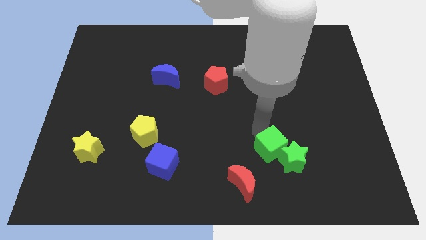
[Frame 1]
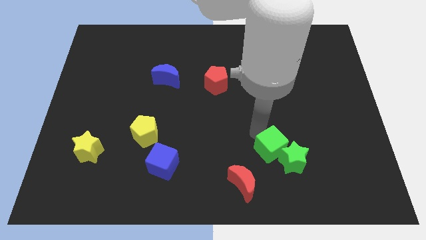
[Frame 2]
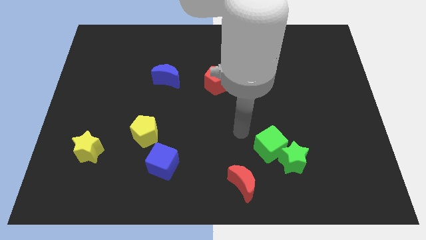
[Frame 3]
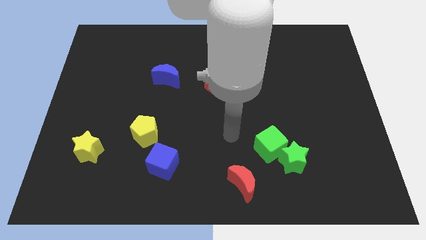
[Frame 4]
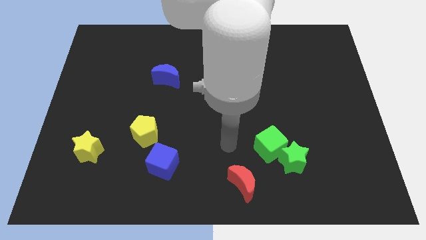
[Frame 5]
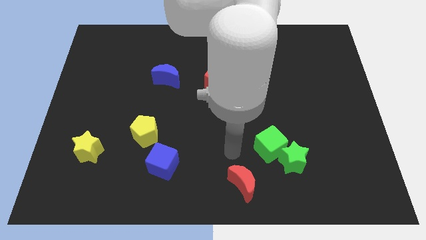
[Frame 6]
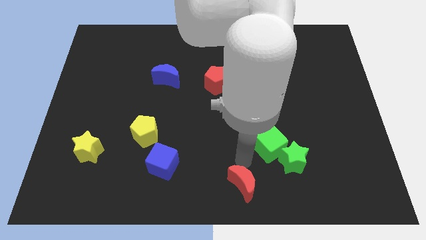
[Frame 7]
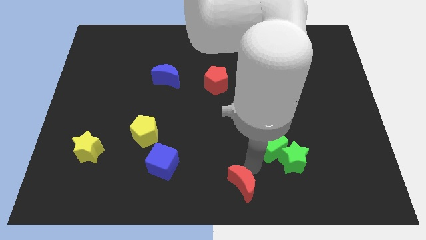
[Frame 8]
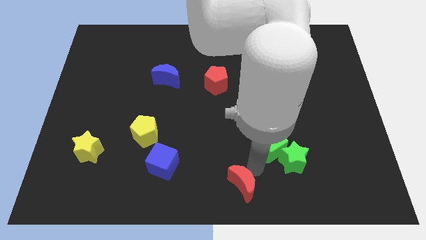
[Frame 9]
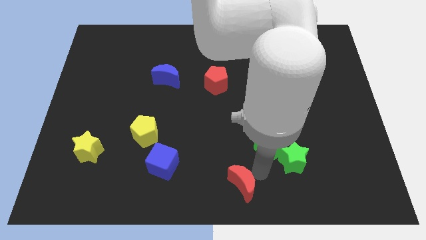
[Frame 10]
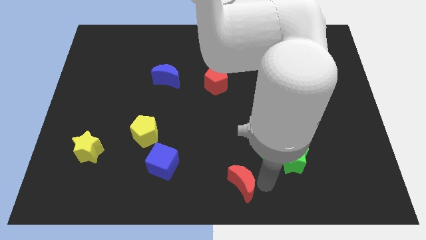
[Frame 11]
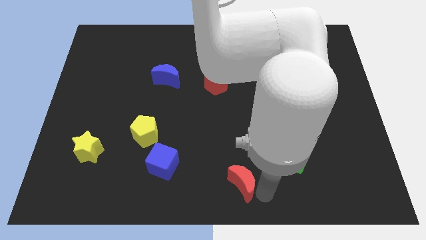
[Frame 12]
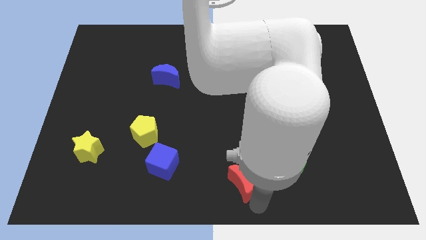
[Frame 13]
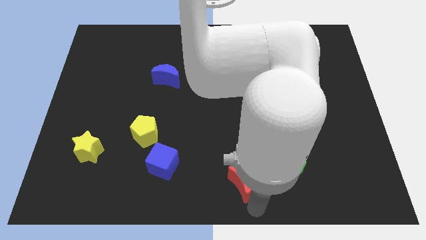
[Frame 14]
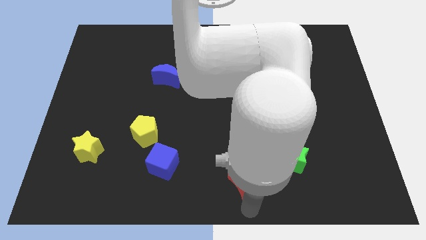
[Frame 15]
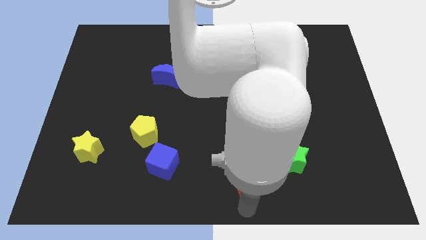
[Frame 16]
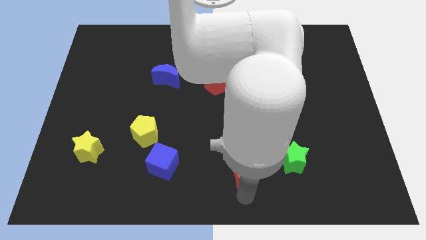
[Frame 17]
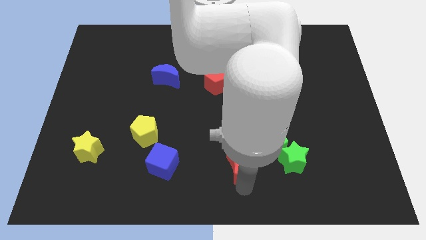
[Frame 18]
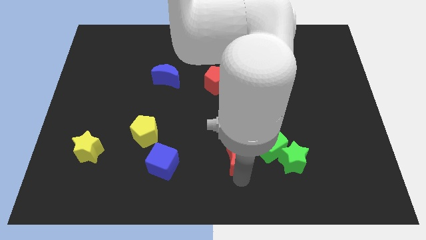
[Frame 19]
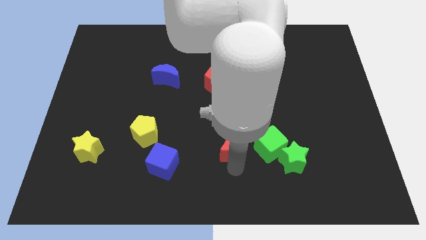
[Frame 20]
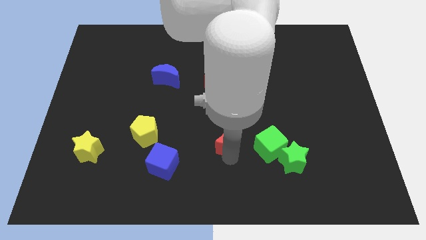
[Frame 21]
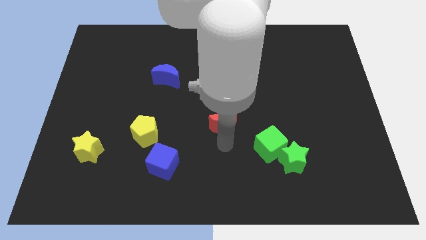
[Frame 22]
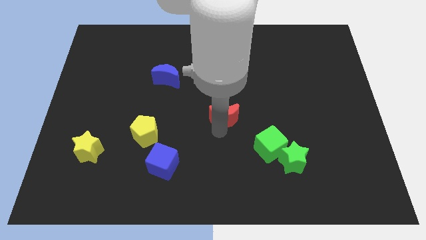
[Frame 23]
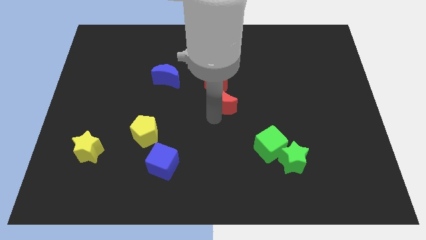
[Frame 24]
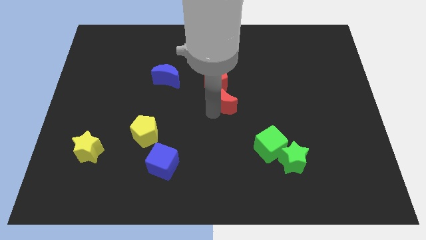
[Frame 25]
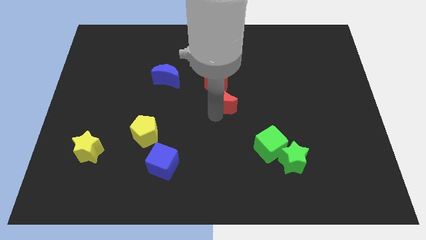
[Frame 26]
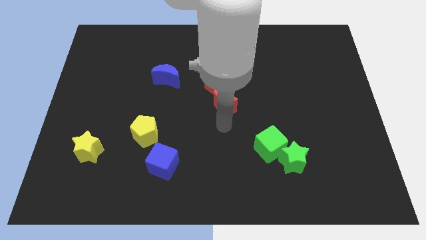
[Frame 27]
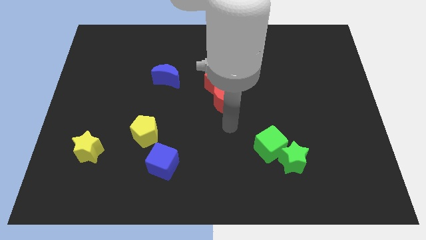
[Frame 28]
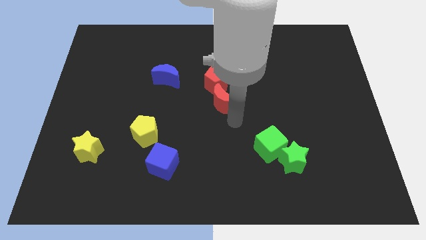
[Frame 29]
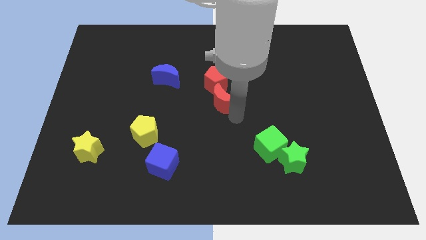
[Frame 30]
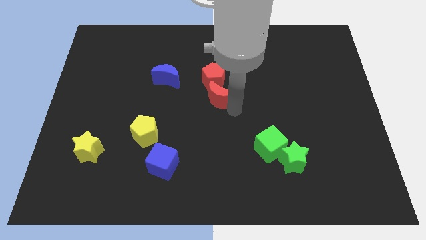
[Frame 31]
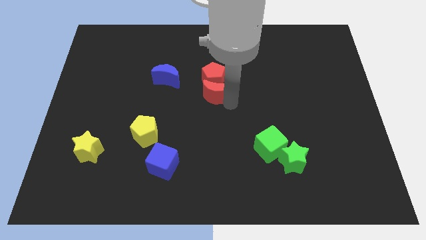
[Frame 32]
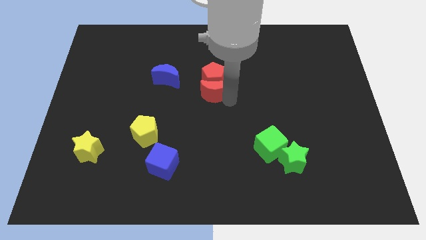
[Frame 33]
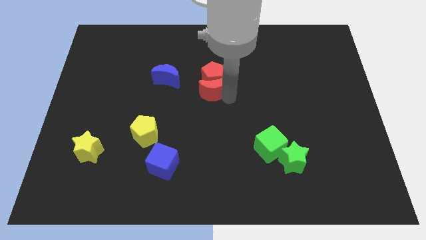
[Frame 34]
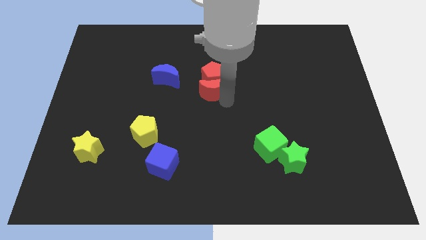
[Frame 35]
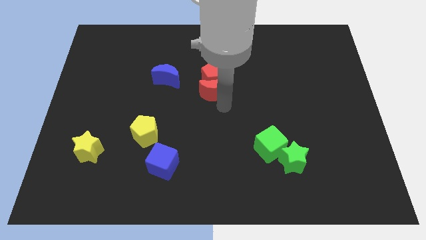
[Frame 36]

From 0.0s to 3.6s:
move the red crescent at the bottom of red pentagon

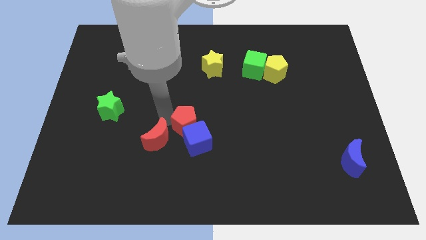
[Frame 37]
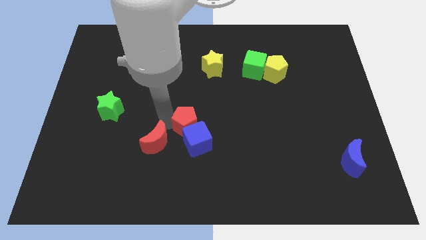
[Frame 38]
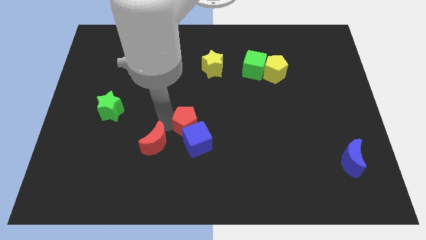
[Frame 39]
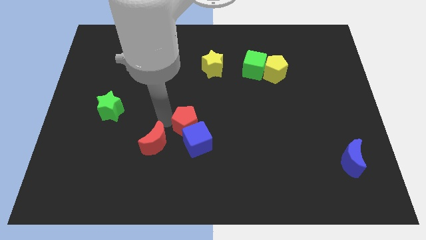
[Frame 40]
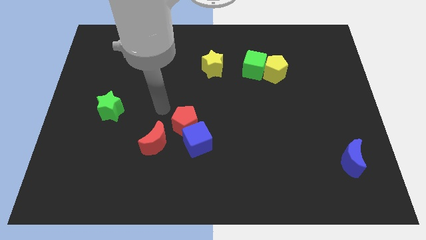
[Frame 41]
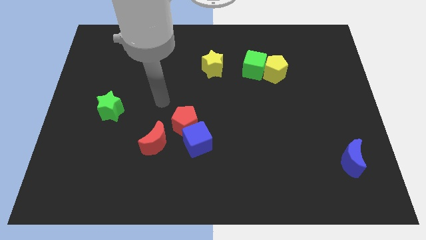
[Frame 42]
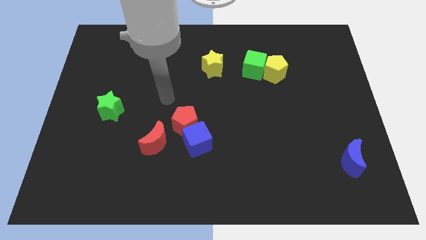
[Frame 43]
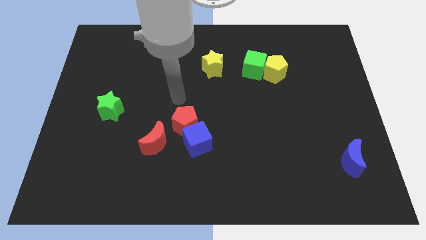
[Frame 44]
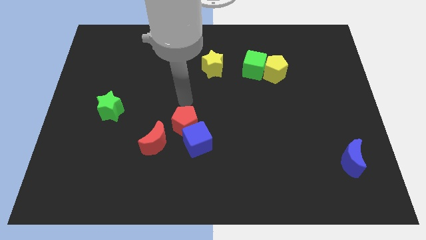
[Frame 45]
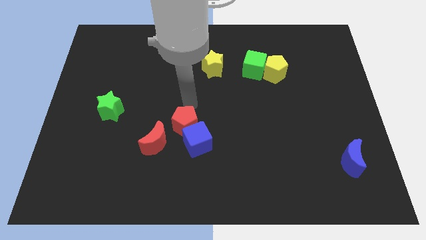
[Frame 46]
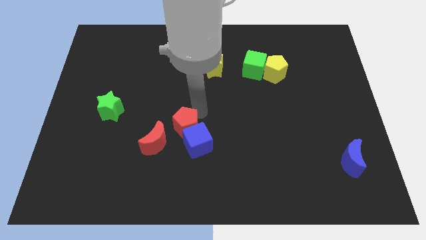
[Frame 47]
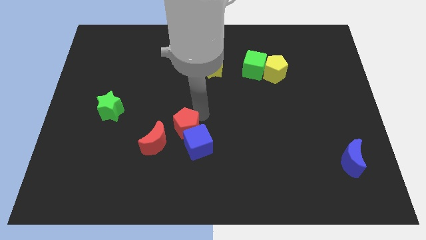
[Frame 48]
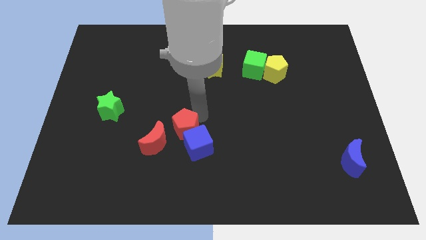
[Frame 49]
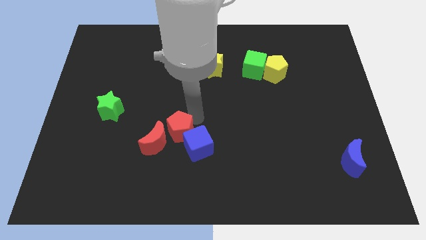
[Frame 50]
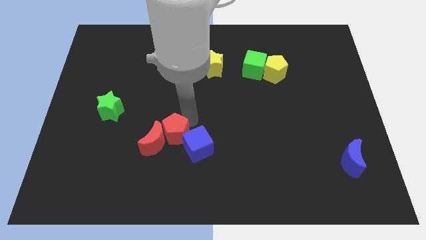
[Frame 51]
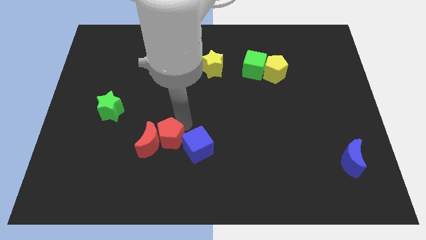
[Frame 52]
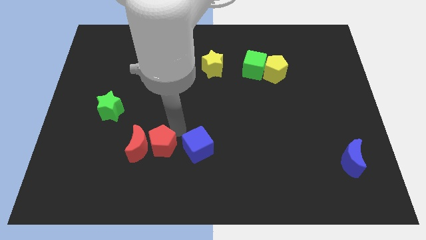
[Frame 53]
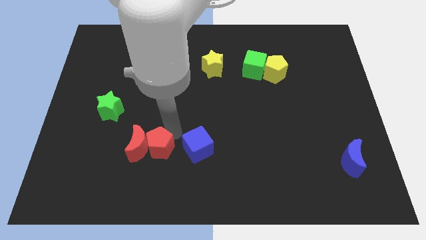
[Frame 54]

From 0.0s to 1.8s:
push the red pentagon to the right of the red crescent

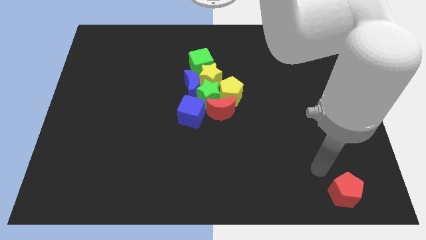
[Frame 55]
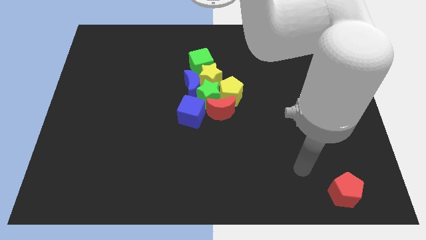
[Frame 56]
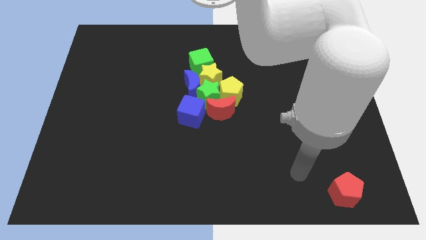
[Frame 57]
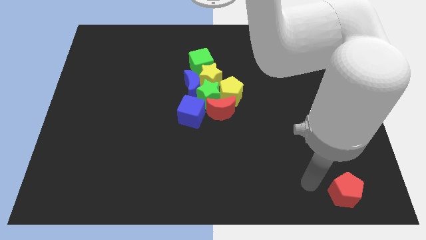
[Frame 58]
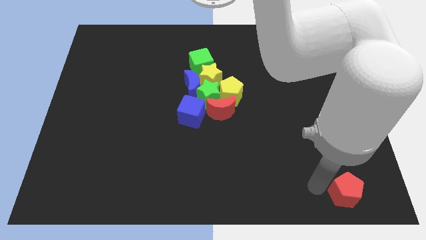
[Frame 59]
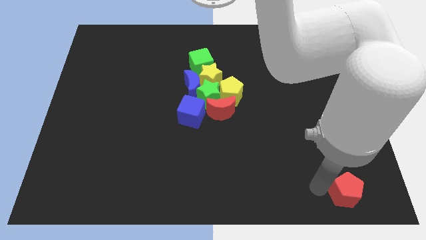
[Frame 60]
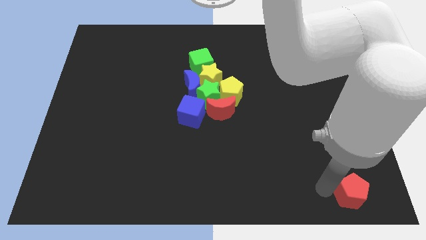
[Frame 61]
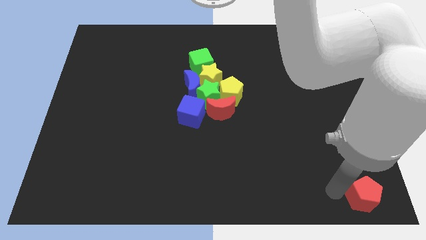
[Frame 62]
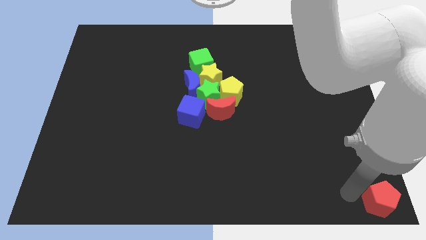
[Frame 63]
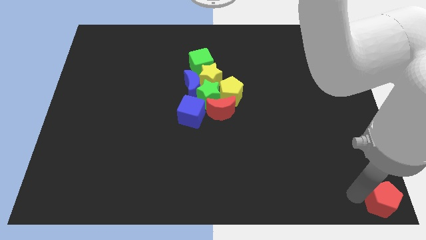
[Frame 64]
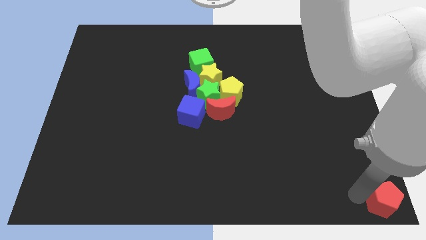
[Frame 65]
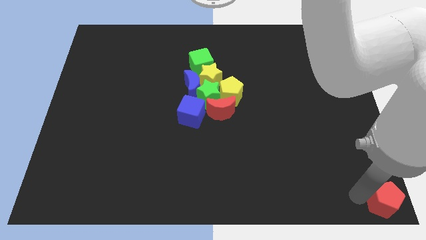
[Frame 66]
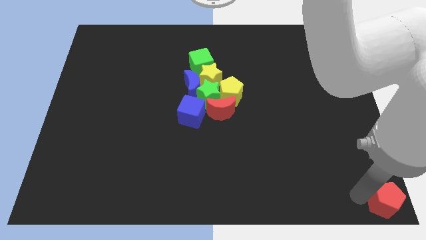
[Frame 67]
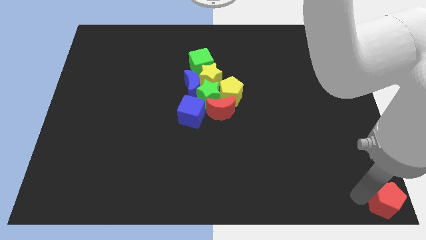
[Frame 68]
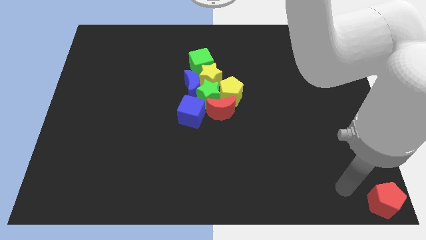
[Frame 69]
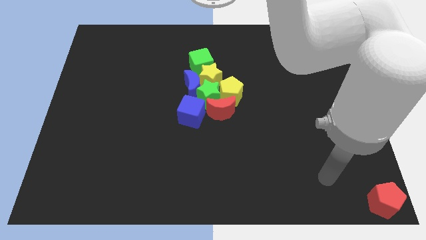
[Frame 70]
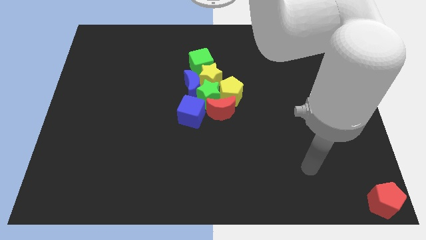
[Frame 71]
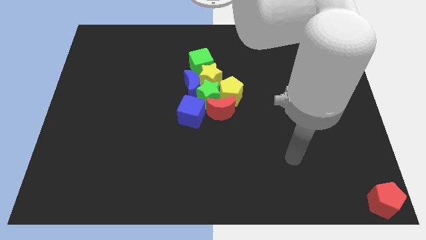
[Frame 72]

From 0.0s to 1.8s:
push red pentagon to the bottom right corner

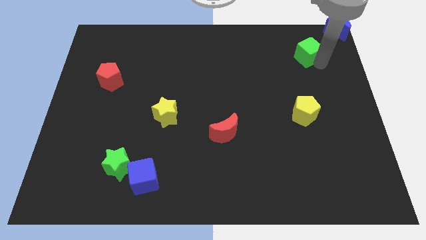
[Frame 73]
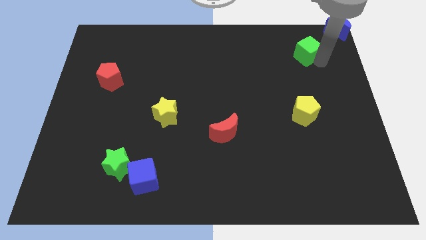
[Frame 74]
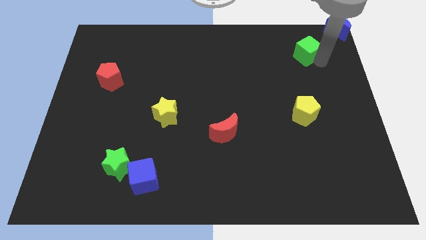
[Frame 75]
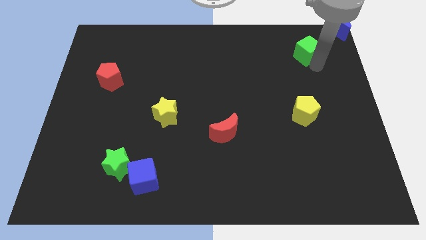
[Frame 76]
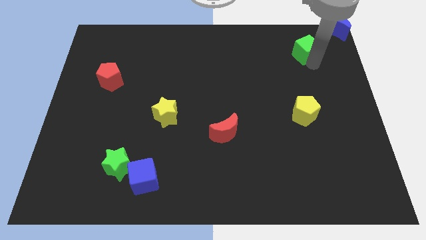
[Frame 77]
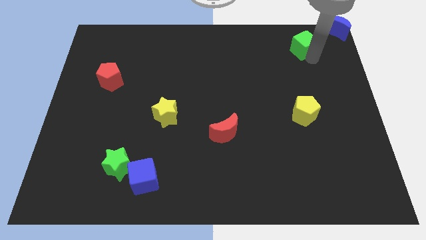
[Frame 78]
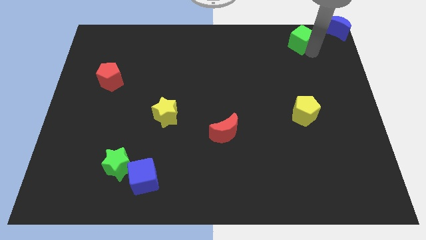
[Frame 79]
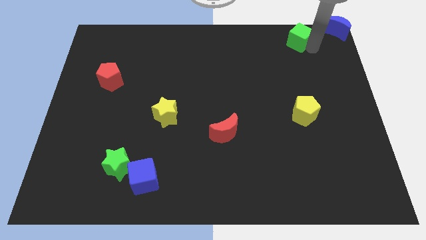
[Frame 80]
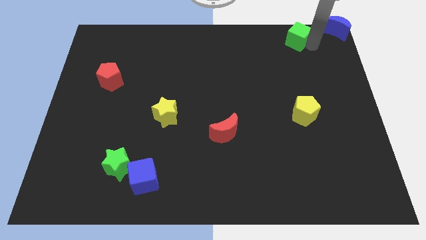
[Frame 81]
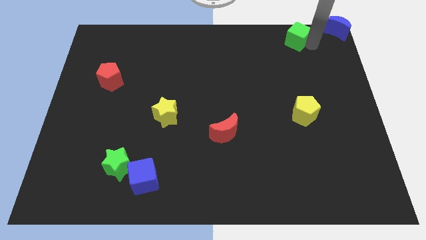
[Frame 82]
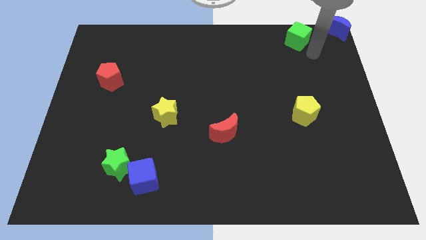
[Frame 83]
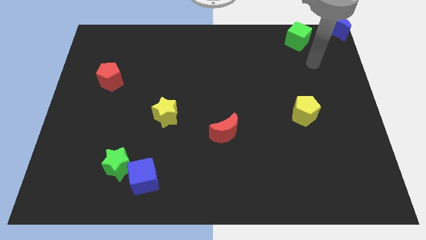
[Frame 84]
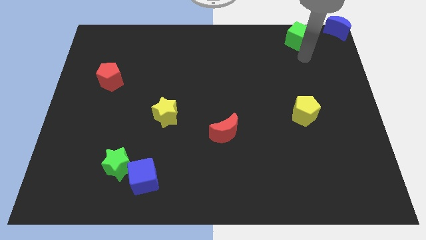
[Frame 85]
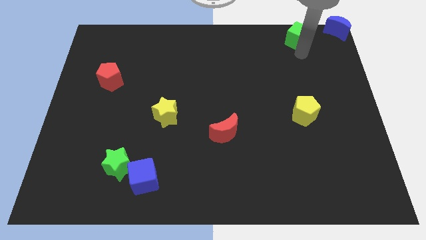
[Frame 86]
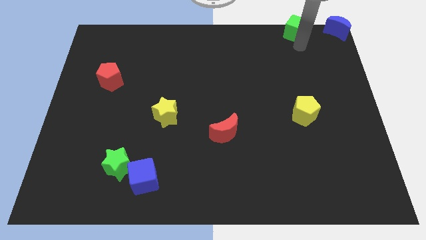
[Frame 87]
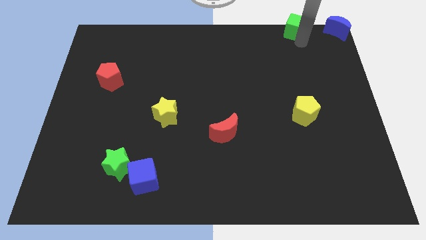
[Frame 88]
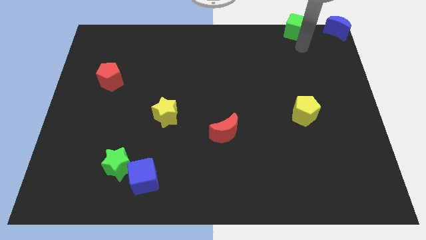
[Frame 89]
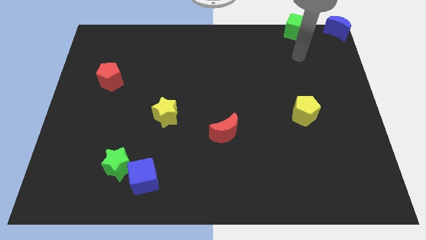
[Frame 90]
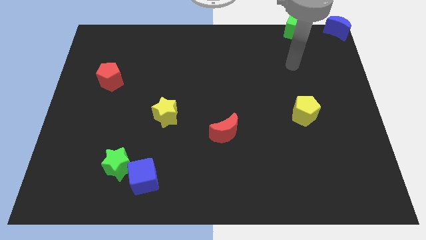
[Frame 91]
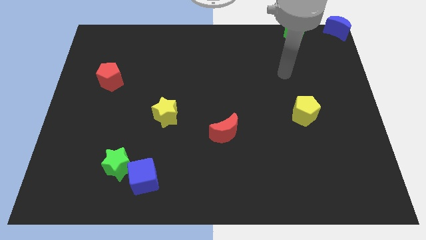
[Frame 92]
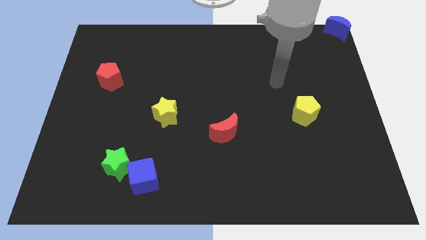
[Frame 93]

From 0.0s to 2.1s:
place the green cube left to the blue moon
